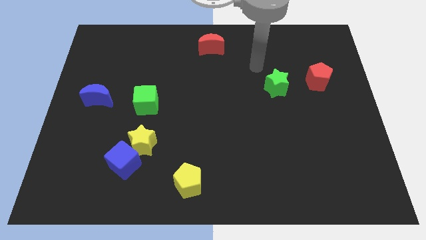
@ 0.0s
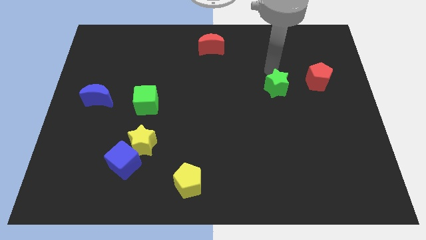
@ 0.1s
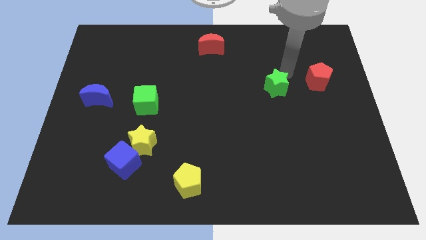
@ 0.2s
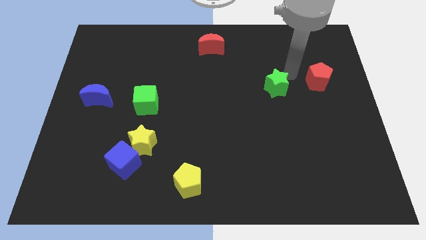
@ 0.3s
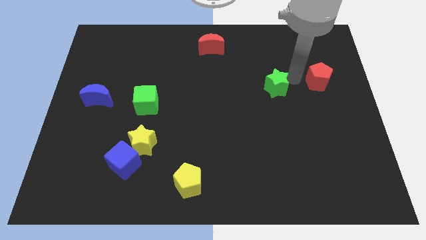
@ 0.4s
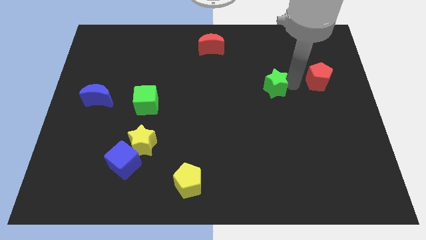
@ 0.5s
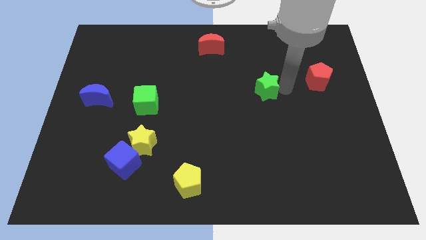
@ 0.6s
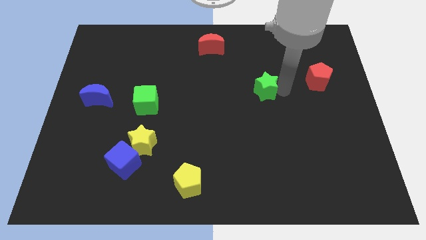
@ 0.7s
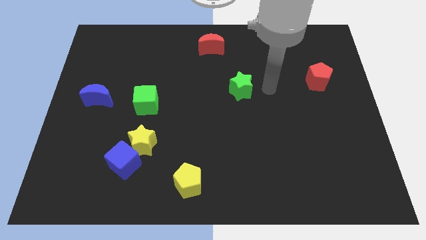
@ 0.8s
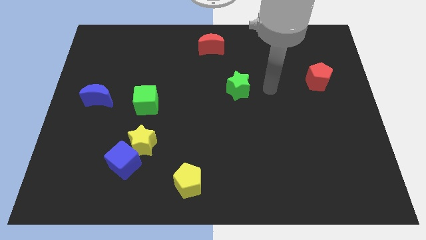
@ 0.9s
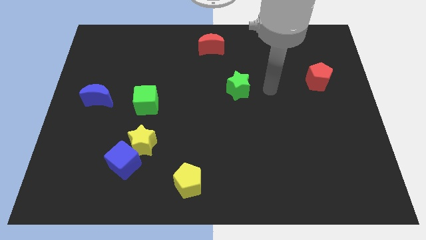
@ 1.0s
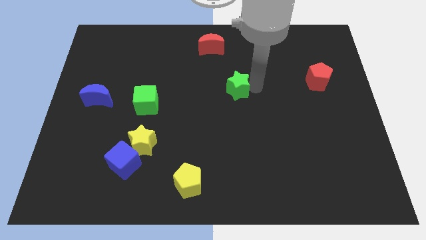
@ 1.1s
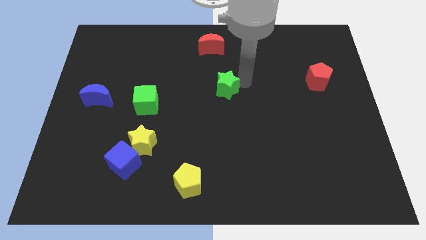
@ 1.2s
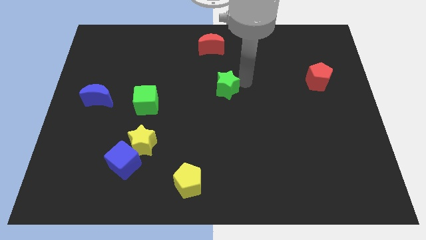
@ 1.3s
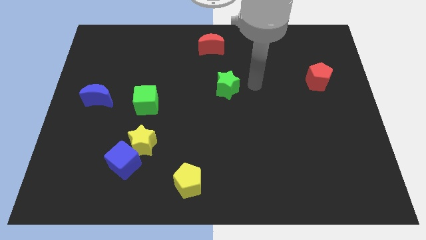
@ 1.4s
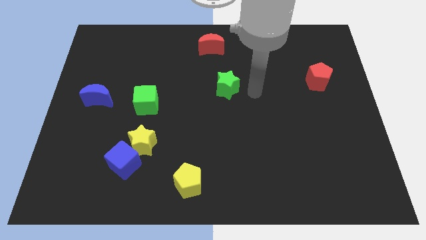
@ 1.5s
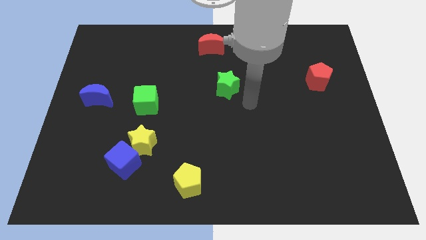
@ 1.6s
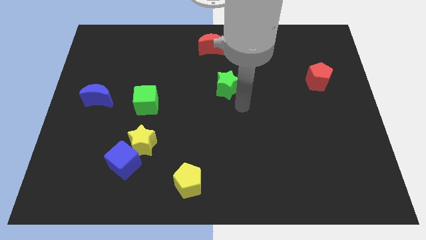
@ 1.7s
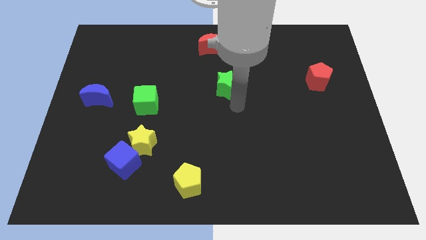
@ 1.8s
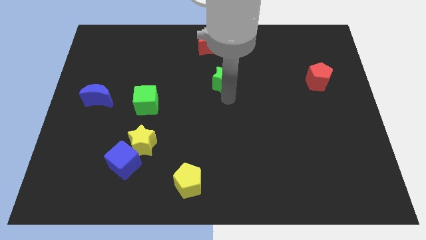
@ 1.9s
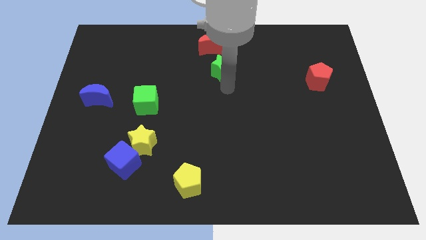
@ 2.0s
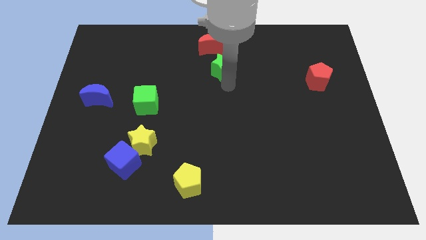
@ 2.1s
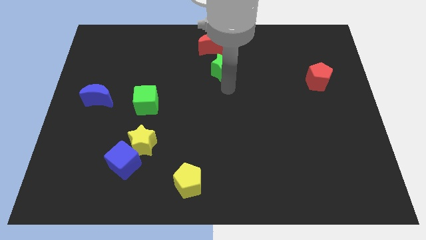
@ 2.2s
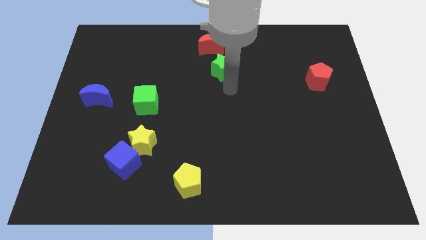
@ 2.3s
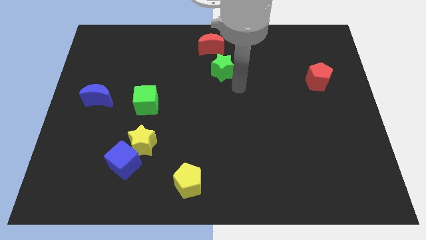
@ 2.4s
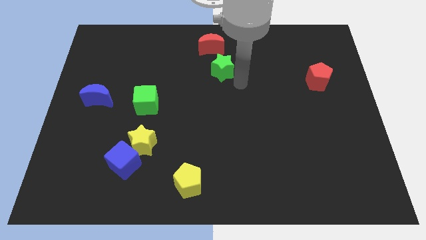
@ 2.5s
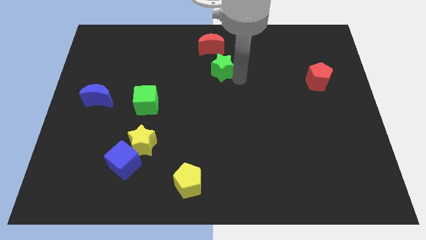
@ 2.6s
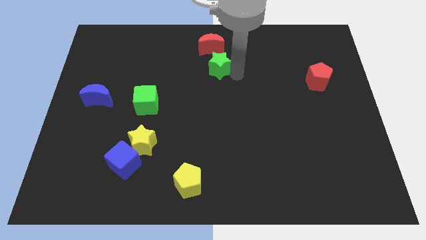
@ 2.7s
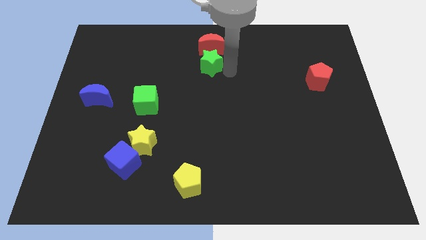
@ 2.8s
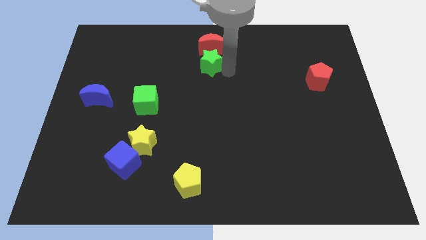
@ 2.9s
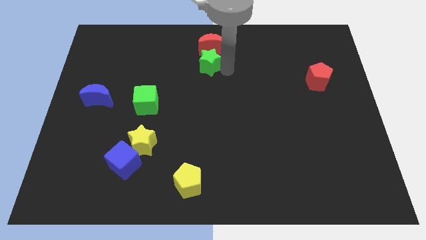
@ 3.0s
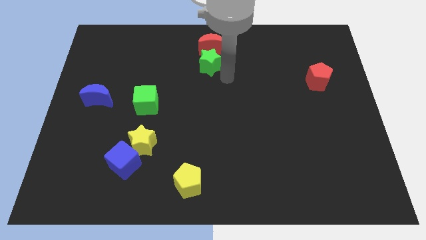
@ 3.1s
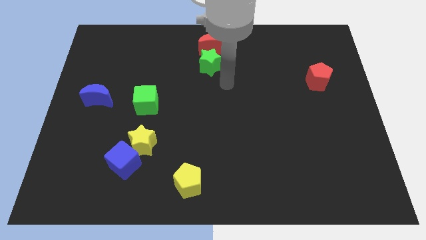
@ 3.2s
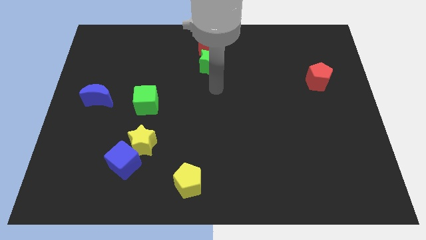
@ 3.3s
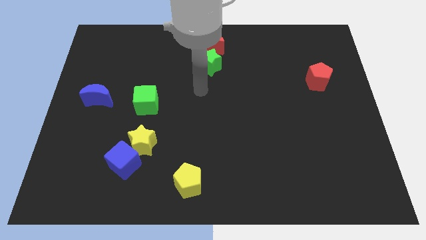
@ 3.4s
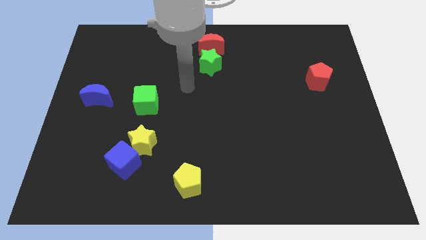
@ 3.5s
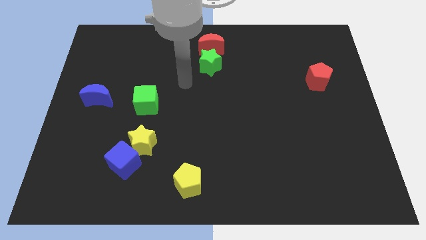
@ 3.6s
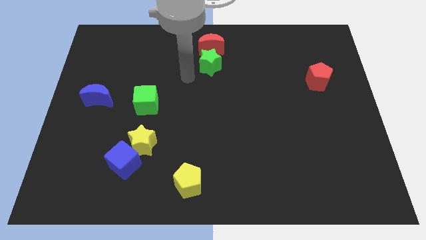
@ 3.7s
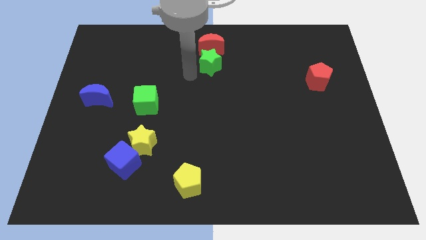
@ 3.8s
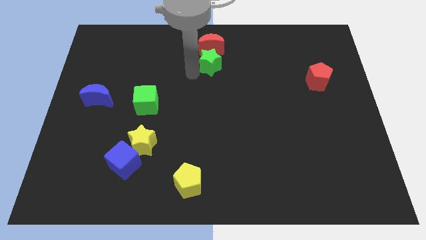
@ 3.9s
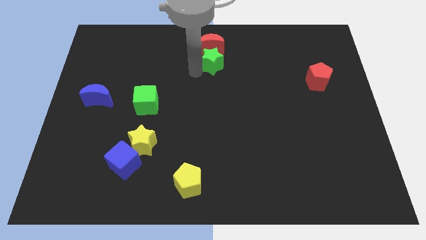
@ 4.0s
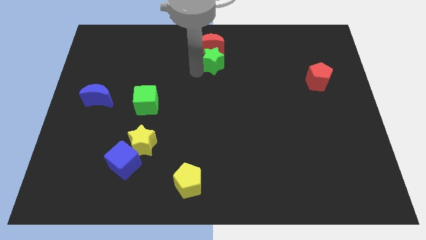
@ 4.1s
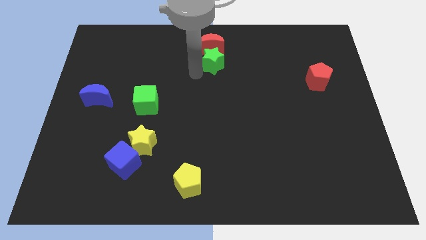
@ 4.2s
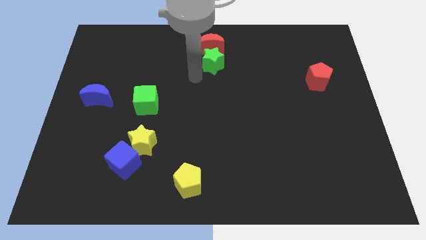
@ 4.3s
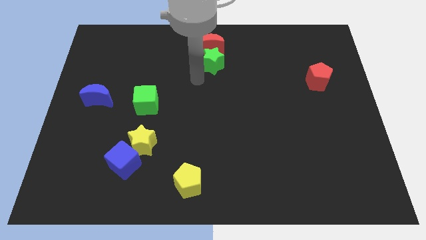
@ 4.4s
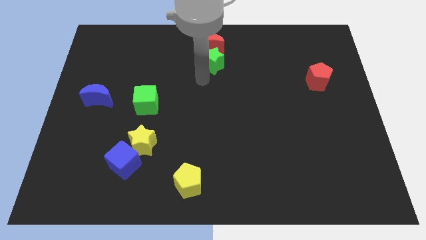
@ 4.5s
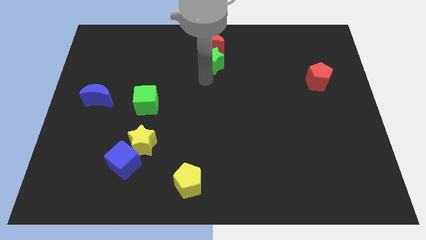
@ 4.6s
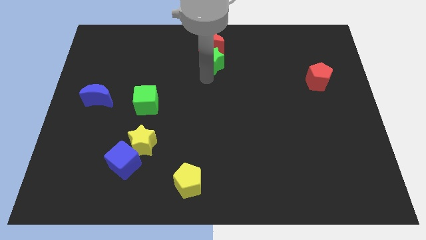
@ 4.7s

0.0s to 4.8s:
push the green star to the bottom side of the red moon

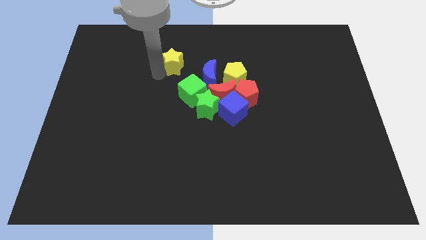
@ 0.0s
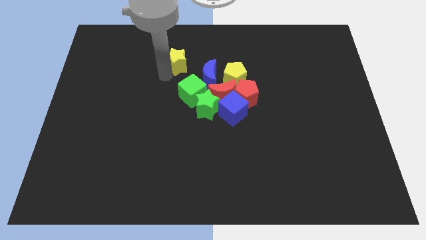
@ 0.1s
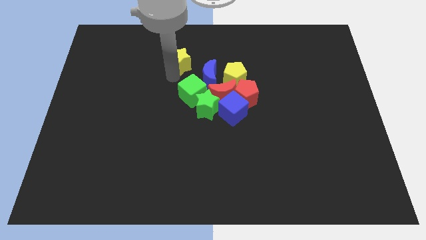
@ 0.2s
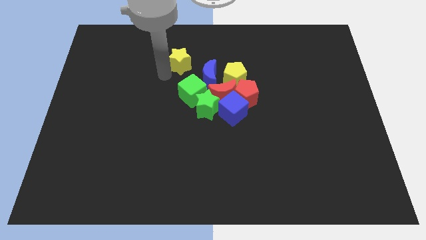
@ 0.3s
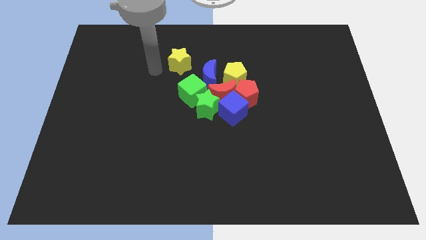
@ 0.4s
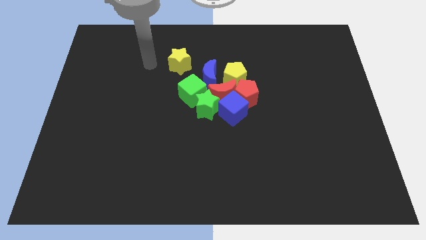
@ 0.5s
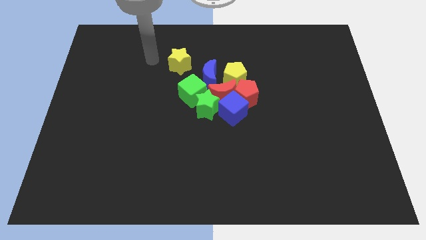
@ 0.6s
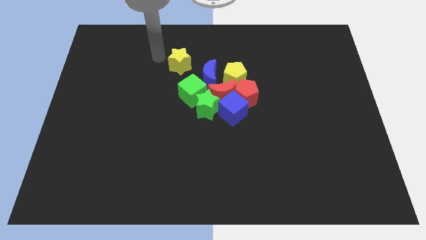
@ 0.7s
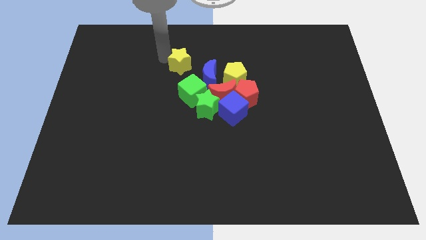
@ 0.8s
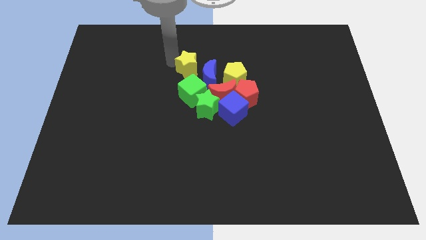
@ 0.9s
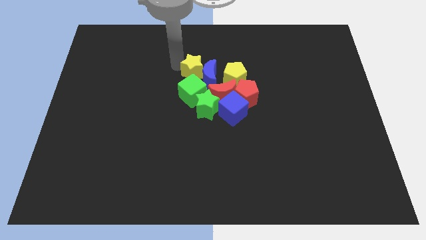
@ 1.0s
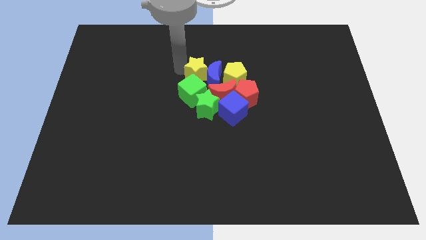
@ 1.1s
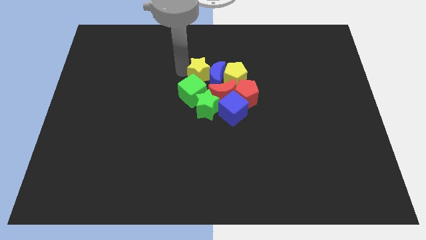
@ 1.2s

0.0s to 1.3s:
push the yellow star into a group of blocks

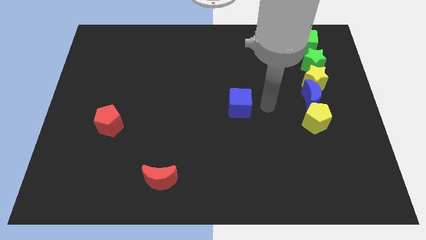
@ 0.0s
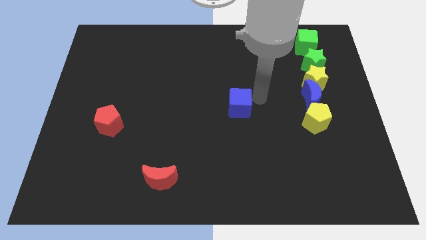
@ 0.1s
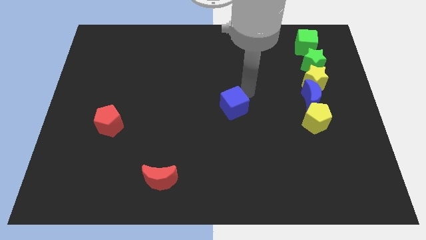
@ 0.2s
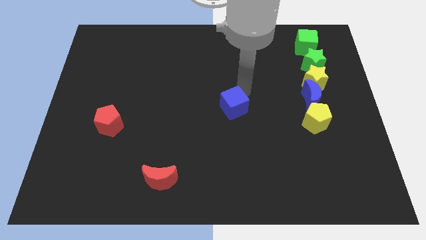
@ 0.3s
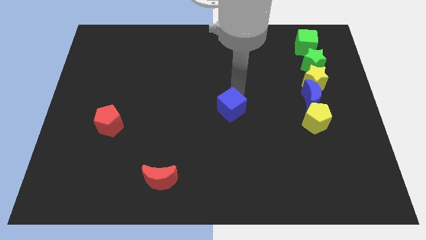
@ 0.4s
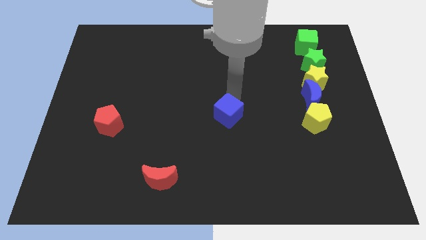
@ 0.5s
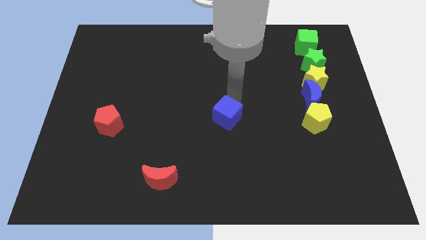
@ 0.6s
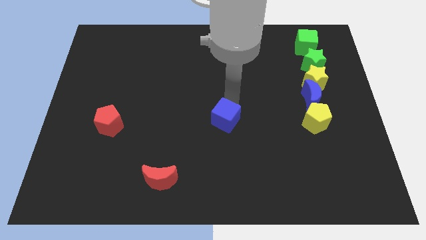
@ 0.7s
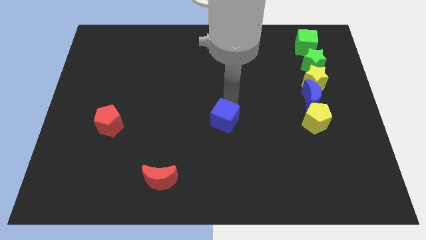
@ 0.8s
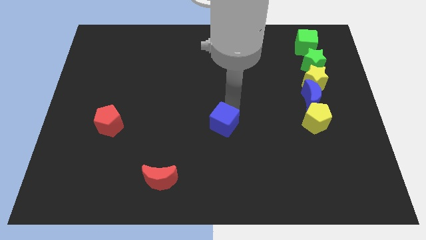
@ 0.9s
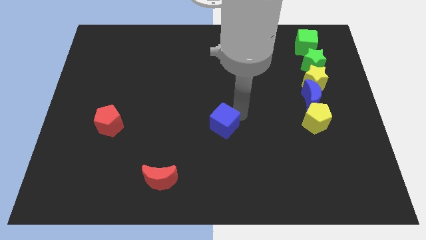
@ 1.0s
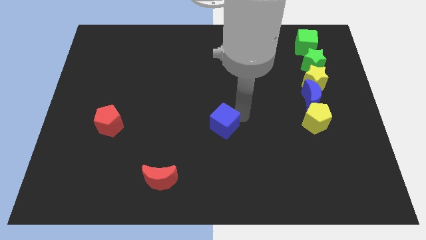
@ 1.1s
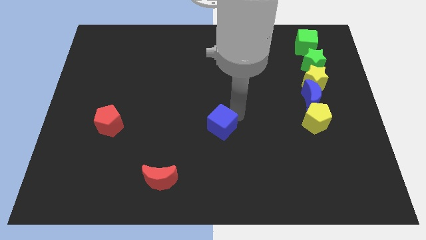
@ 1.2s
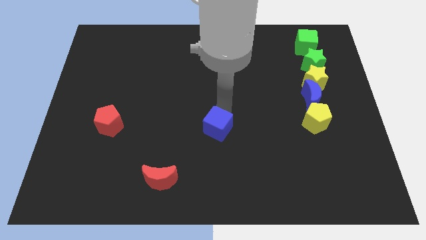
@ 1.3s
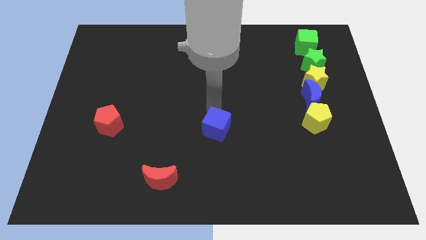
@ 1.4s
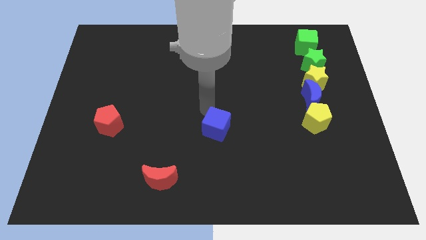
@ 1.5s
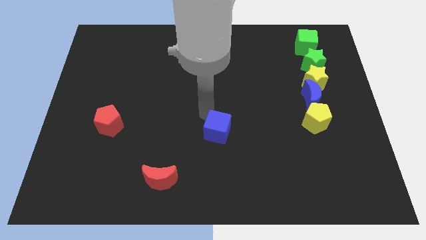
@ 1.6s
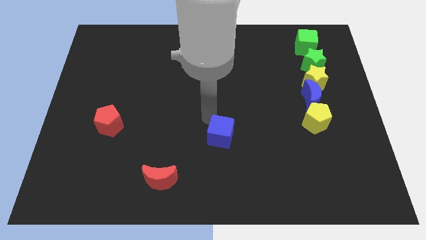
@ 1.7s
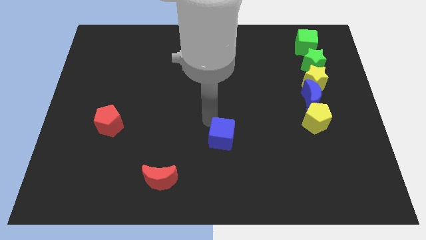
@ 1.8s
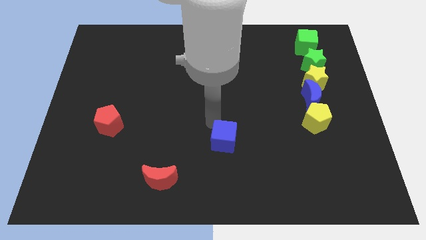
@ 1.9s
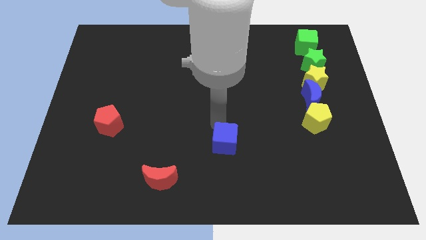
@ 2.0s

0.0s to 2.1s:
move the blue cube slightly to the bottom center of the board

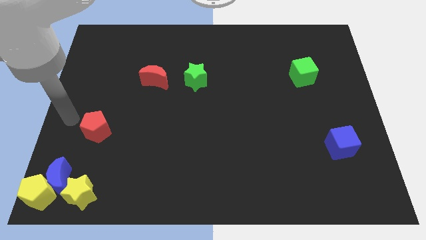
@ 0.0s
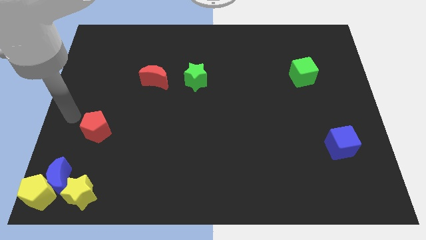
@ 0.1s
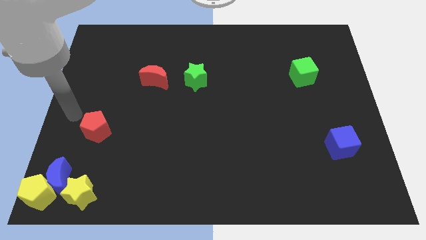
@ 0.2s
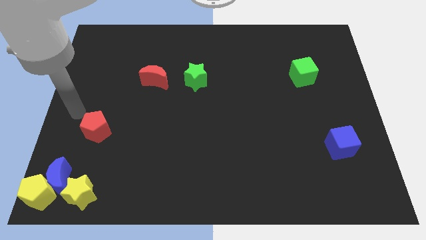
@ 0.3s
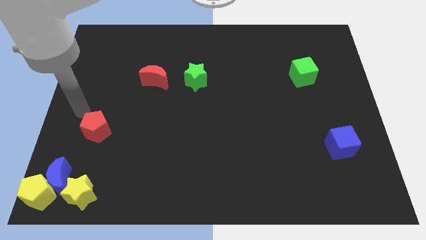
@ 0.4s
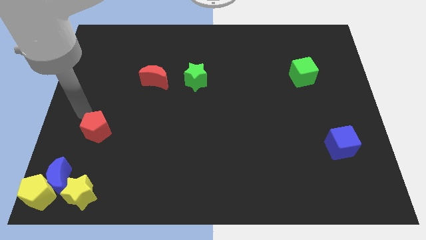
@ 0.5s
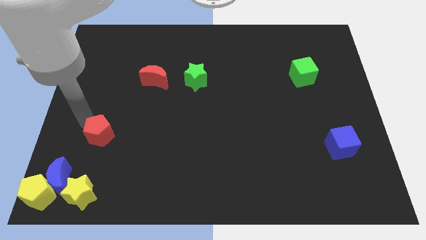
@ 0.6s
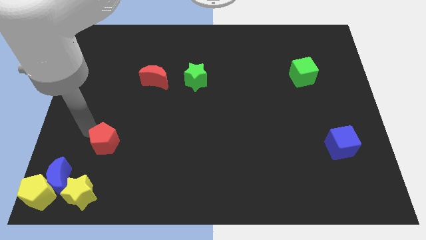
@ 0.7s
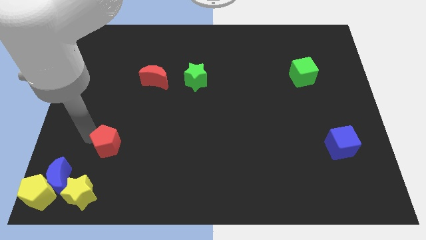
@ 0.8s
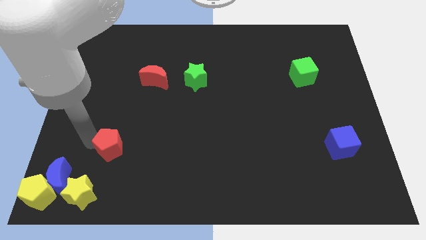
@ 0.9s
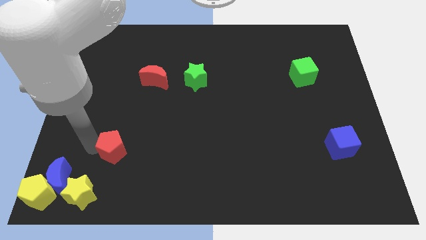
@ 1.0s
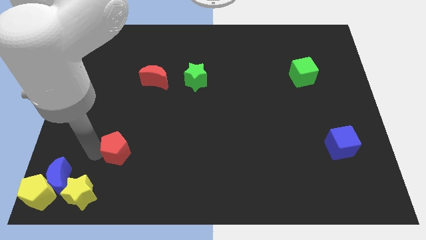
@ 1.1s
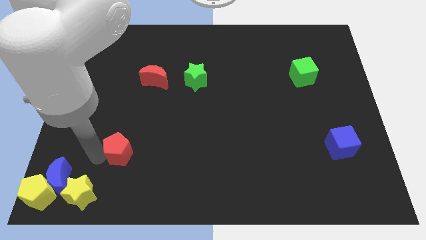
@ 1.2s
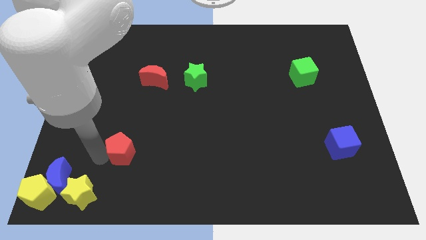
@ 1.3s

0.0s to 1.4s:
move the red pentagon to the bottom of the board
